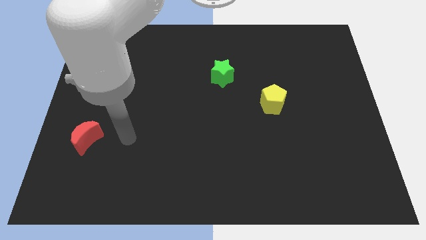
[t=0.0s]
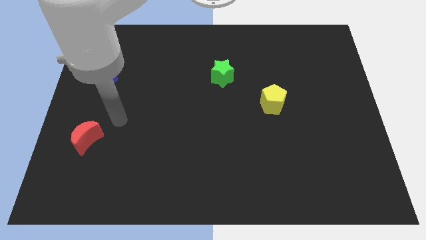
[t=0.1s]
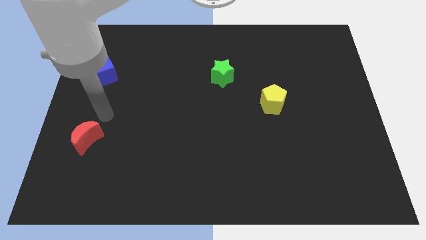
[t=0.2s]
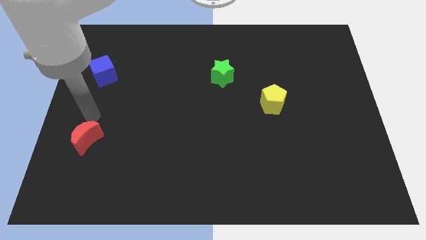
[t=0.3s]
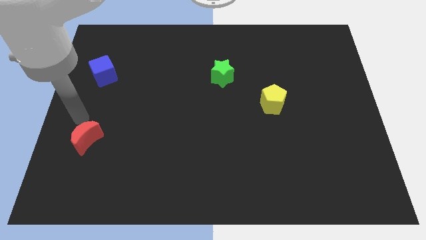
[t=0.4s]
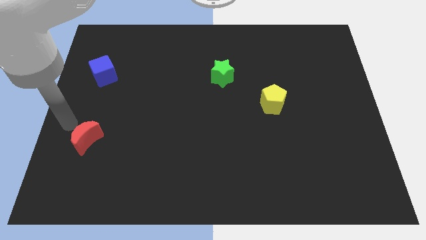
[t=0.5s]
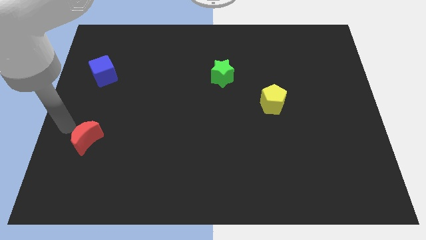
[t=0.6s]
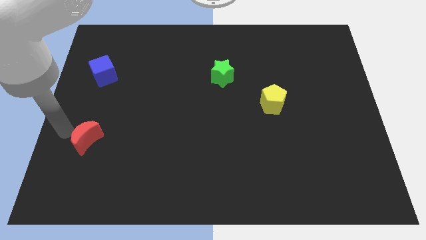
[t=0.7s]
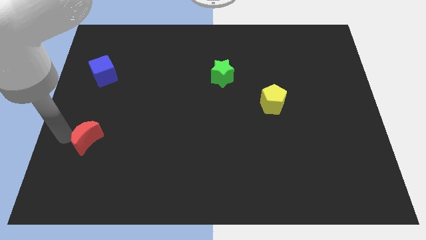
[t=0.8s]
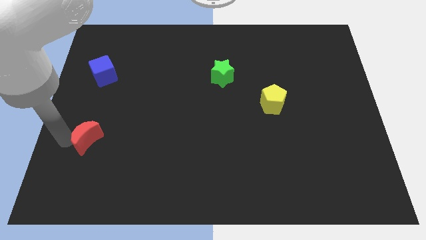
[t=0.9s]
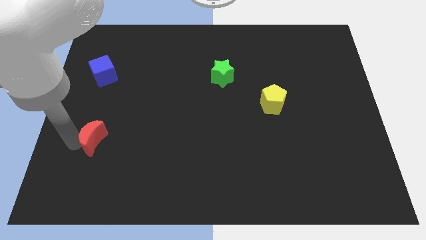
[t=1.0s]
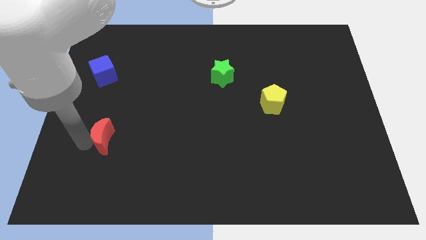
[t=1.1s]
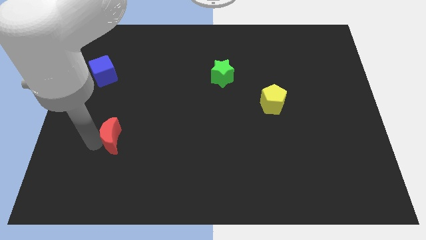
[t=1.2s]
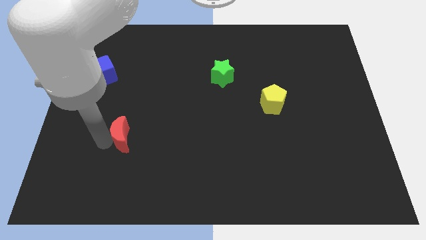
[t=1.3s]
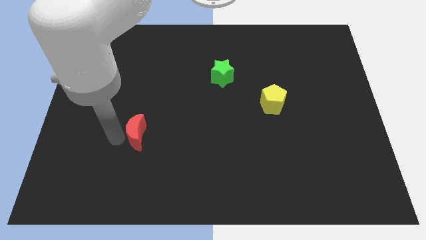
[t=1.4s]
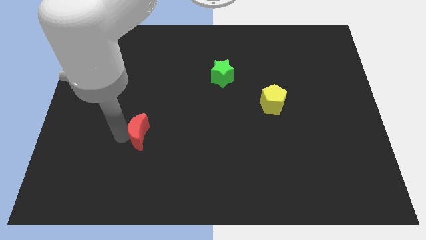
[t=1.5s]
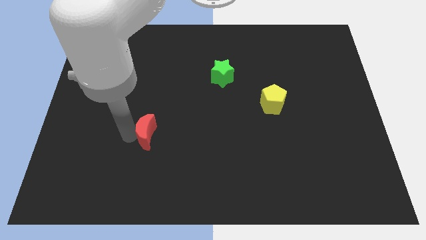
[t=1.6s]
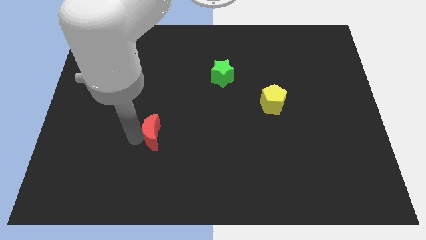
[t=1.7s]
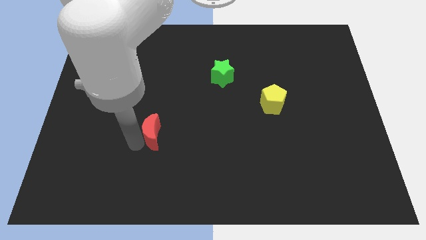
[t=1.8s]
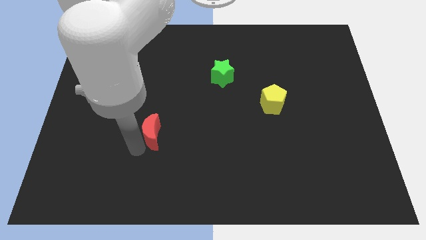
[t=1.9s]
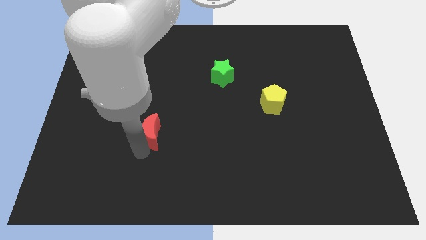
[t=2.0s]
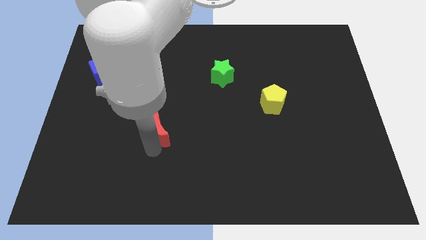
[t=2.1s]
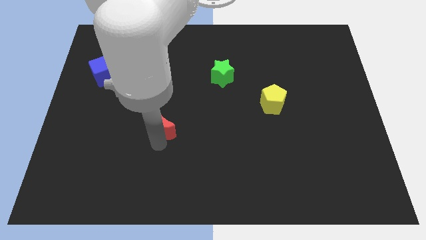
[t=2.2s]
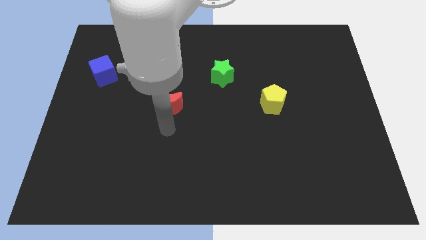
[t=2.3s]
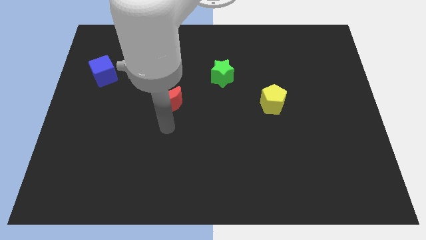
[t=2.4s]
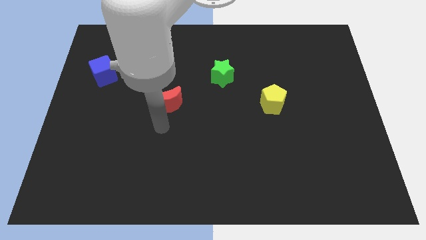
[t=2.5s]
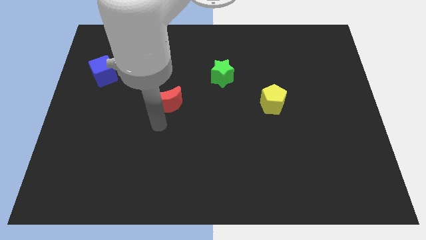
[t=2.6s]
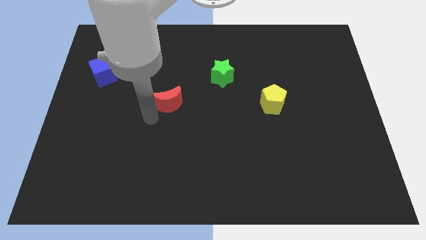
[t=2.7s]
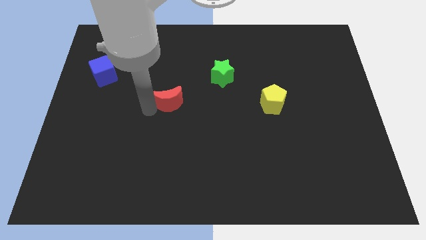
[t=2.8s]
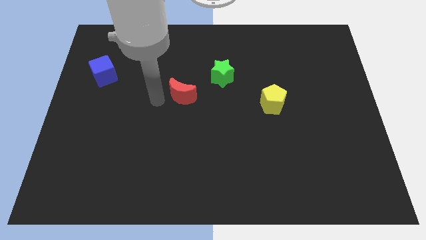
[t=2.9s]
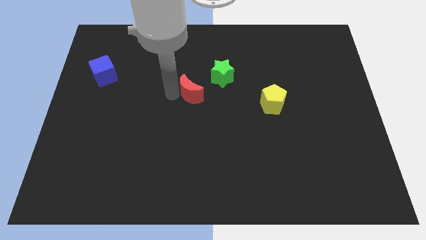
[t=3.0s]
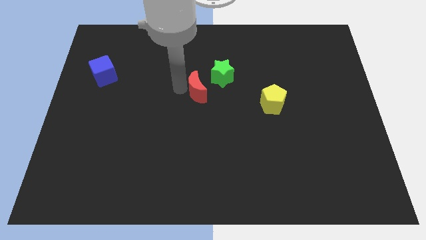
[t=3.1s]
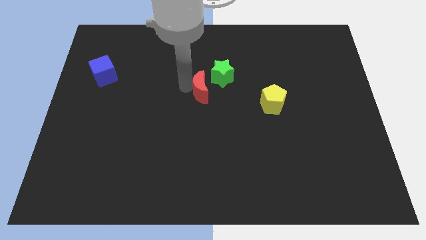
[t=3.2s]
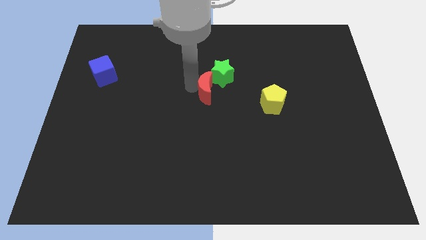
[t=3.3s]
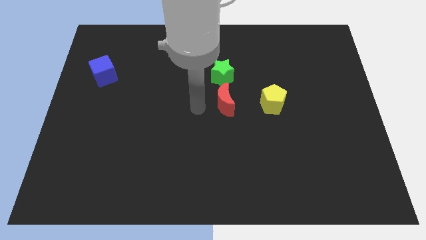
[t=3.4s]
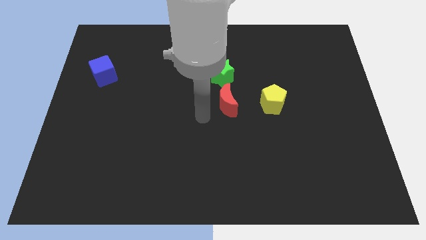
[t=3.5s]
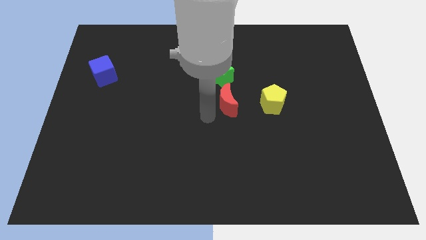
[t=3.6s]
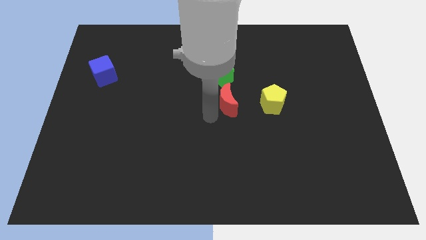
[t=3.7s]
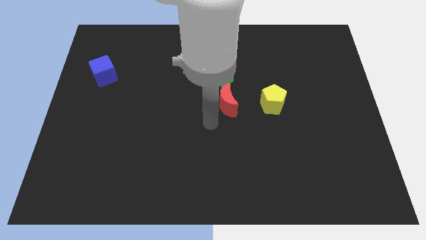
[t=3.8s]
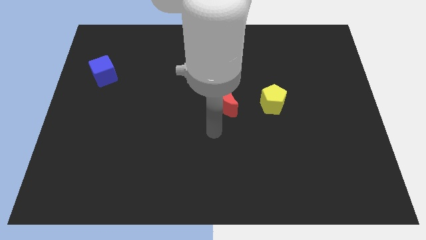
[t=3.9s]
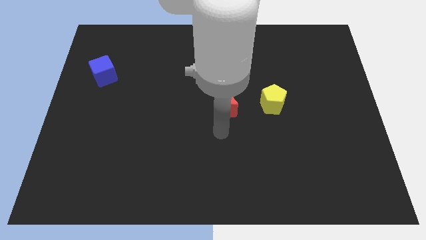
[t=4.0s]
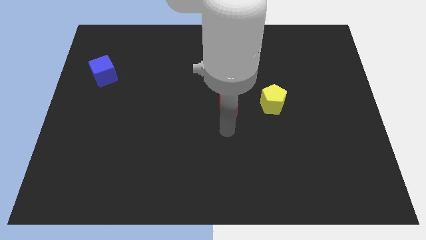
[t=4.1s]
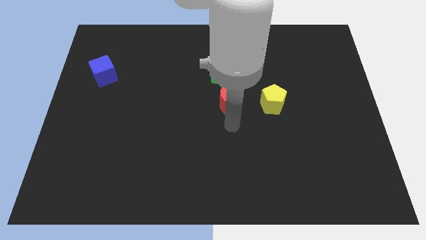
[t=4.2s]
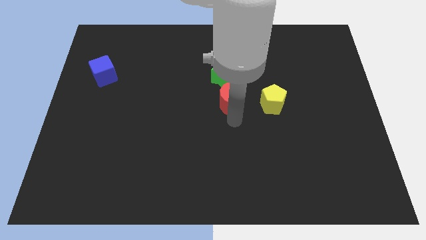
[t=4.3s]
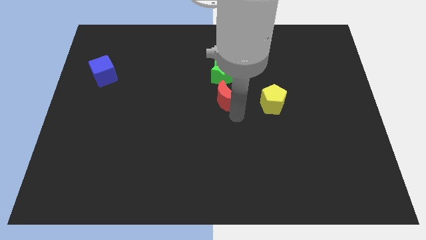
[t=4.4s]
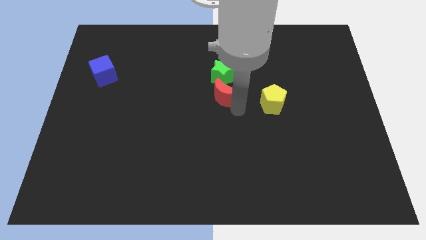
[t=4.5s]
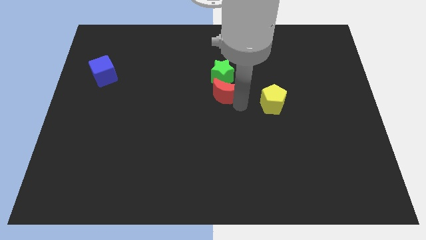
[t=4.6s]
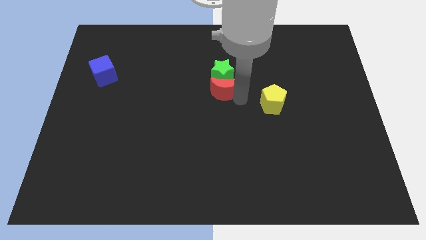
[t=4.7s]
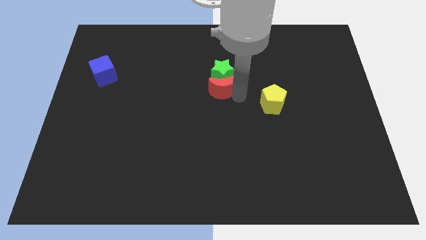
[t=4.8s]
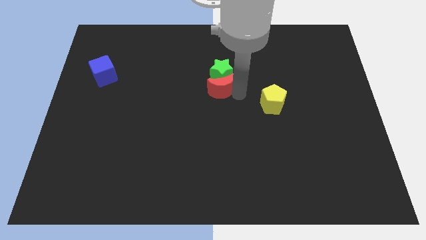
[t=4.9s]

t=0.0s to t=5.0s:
move the red block next to the star

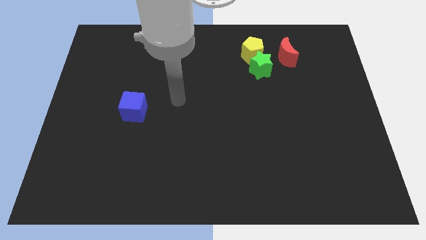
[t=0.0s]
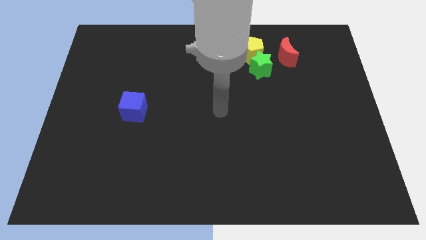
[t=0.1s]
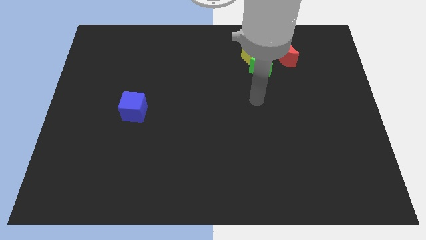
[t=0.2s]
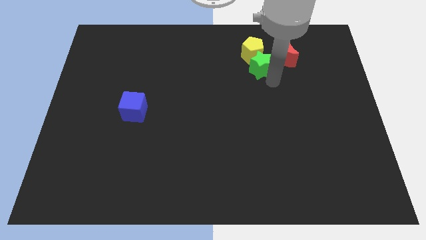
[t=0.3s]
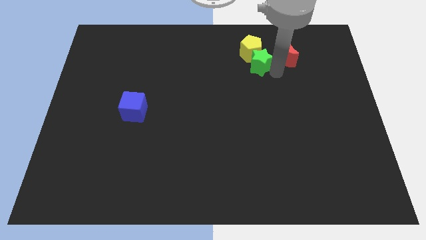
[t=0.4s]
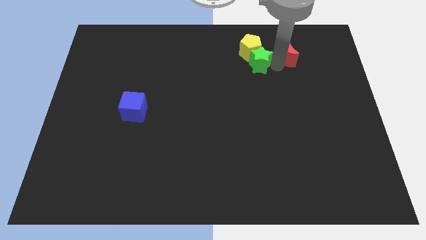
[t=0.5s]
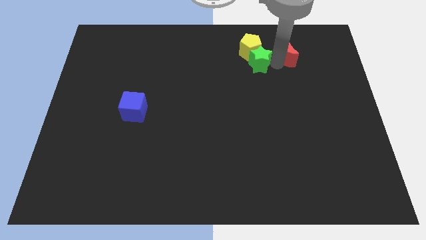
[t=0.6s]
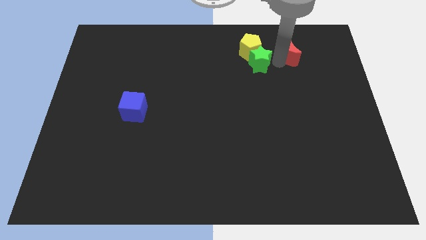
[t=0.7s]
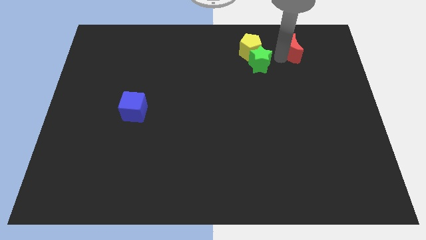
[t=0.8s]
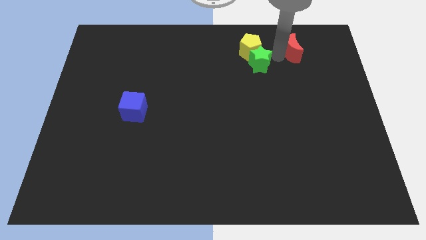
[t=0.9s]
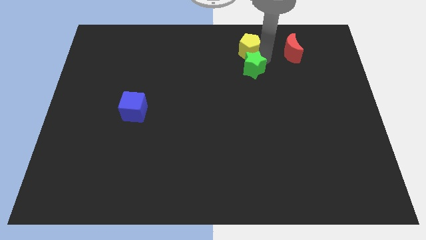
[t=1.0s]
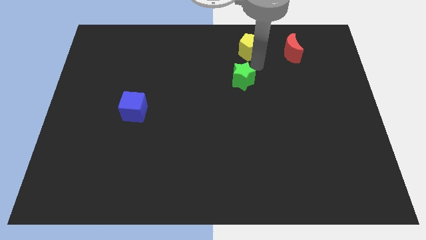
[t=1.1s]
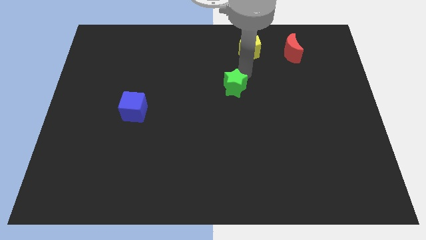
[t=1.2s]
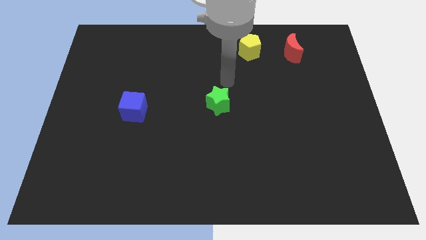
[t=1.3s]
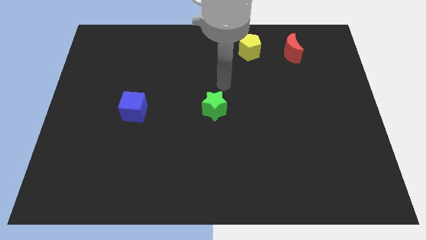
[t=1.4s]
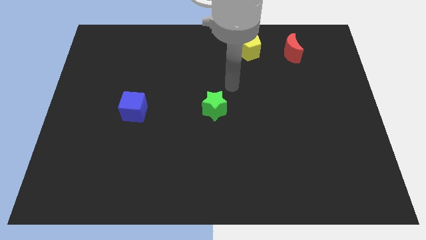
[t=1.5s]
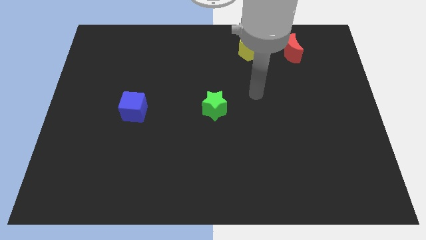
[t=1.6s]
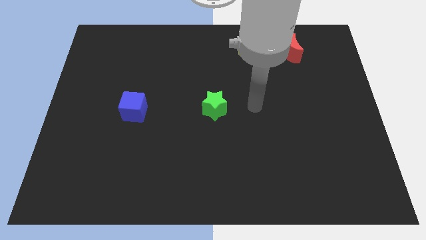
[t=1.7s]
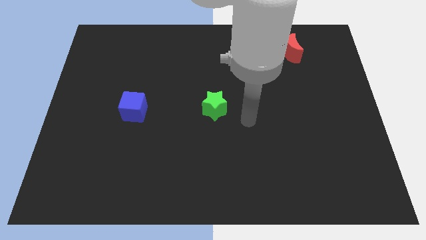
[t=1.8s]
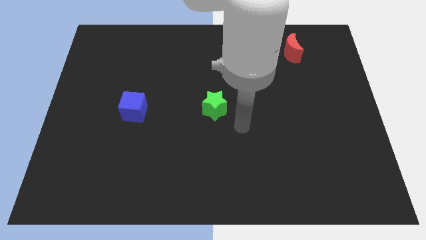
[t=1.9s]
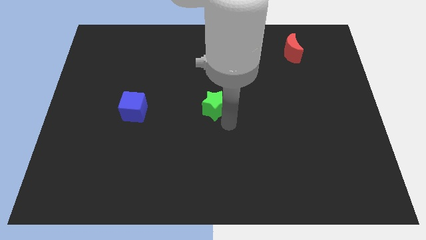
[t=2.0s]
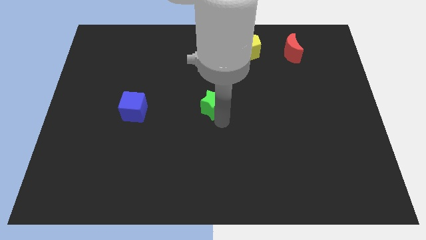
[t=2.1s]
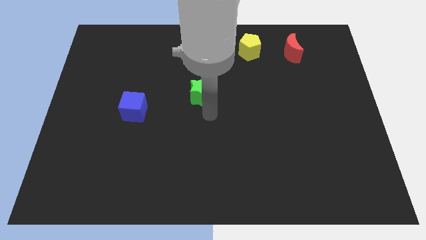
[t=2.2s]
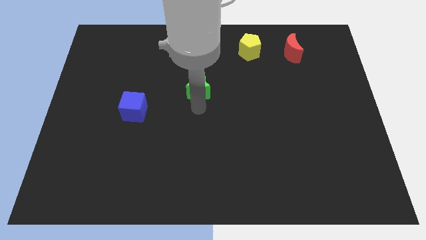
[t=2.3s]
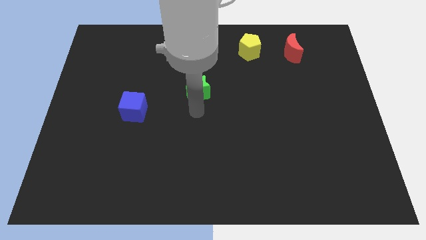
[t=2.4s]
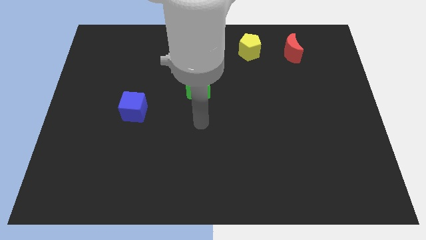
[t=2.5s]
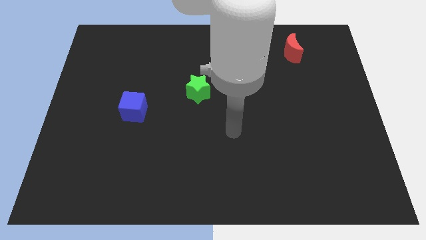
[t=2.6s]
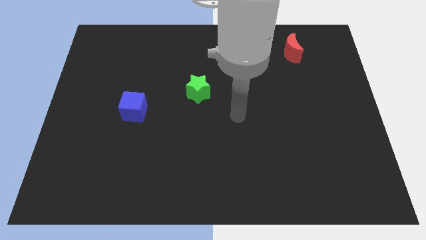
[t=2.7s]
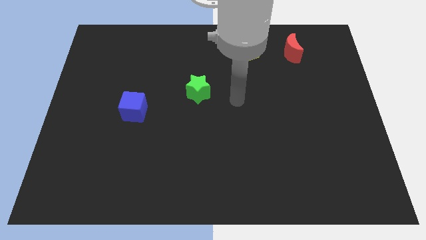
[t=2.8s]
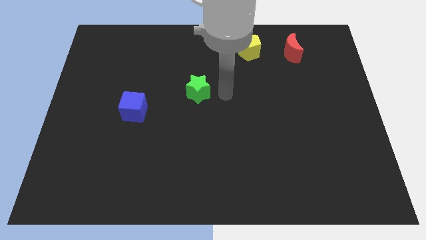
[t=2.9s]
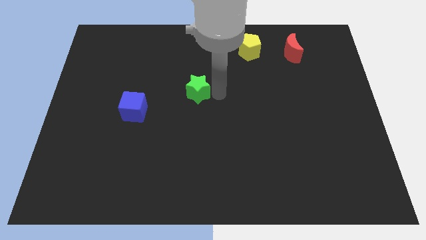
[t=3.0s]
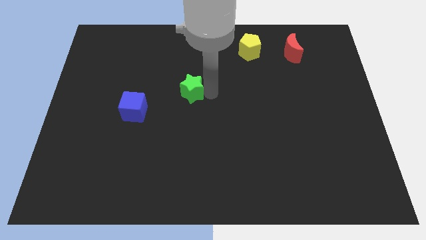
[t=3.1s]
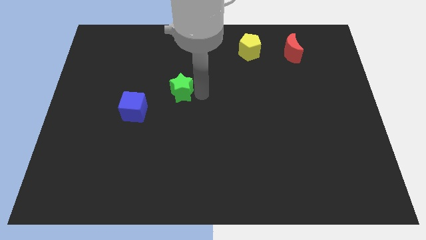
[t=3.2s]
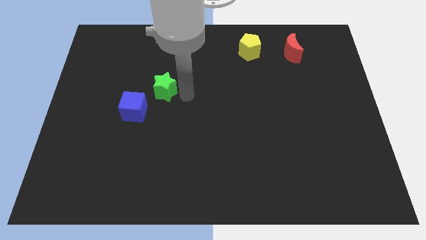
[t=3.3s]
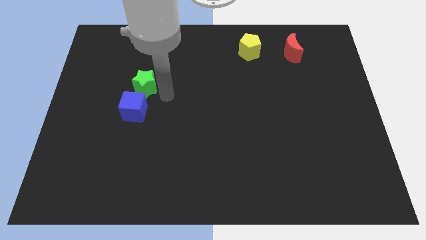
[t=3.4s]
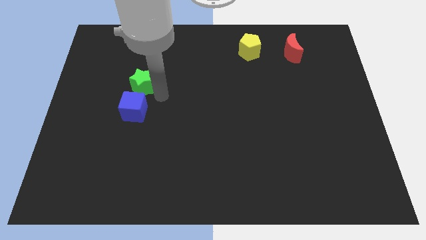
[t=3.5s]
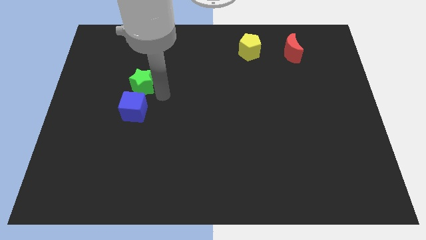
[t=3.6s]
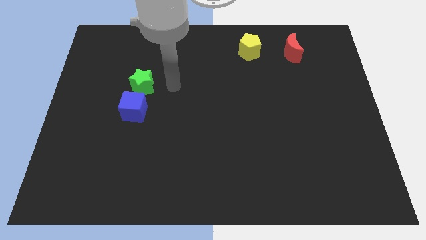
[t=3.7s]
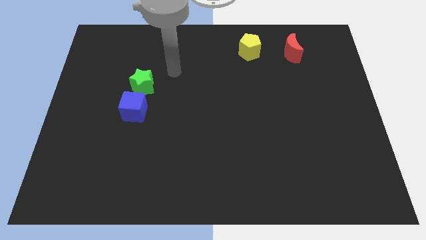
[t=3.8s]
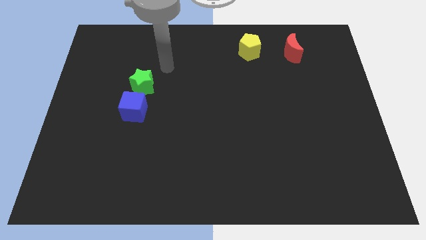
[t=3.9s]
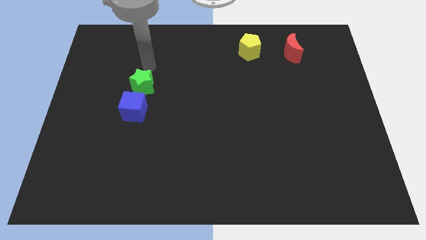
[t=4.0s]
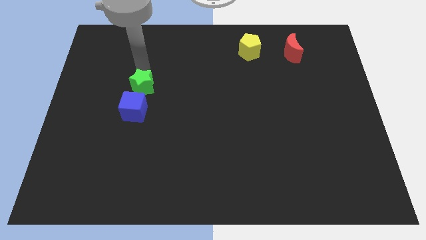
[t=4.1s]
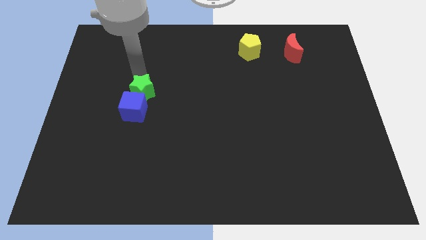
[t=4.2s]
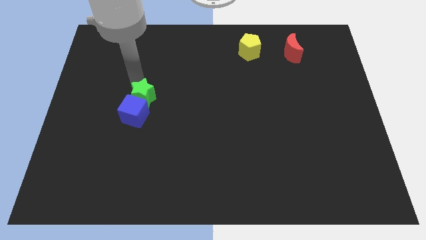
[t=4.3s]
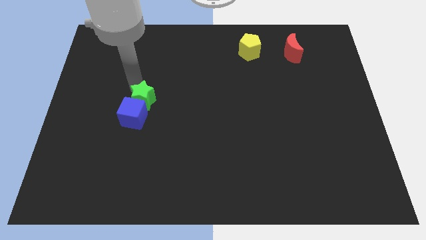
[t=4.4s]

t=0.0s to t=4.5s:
push the green block close to the blue cube
